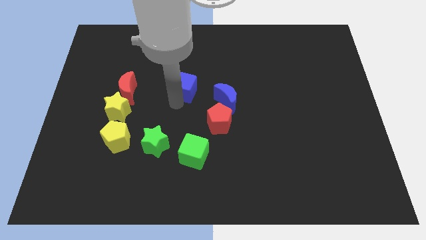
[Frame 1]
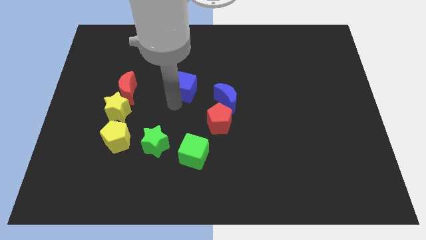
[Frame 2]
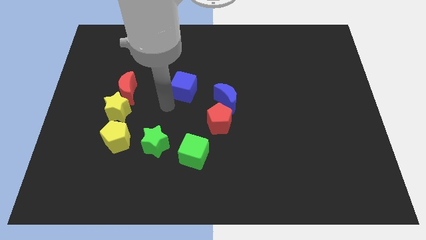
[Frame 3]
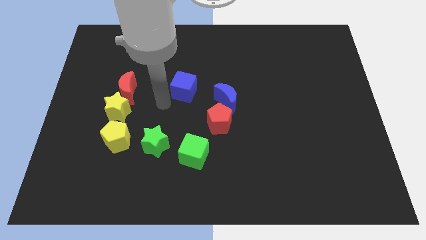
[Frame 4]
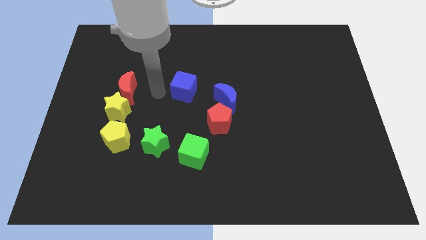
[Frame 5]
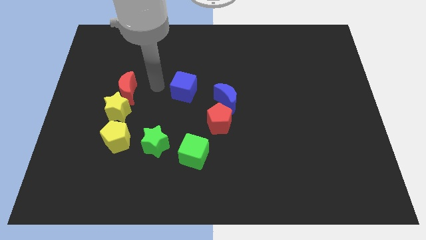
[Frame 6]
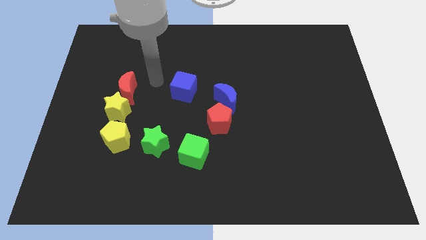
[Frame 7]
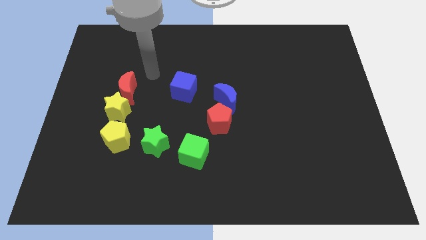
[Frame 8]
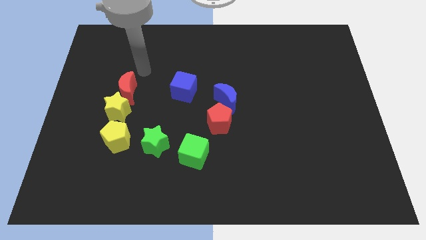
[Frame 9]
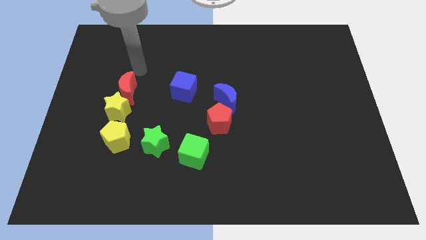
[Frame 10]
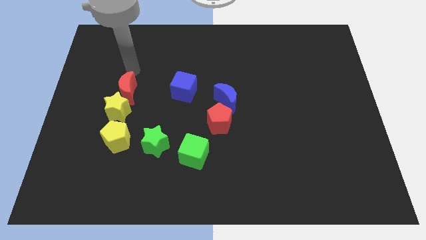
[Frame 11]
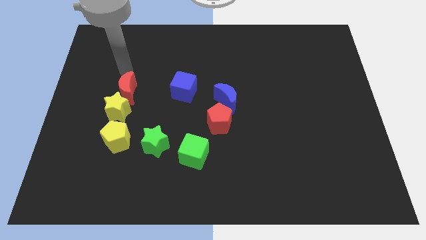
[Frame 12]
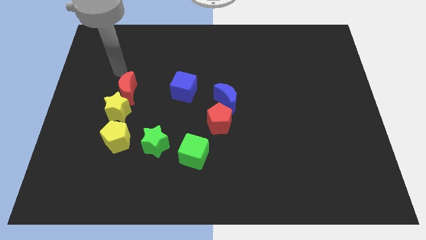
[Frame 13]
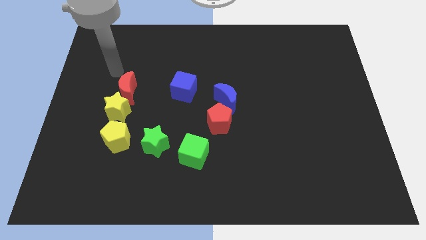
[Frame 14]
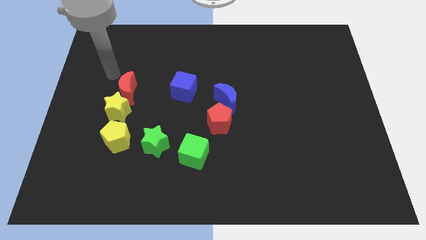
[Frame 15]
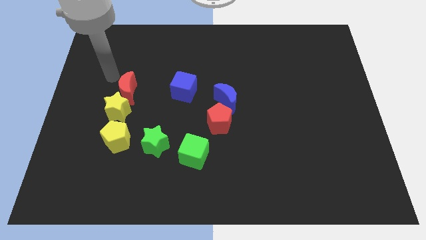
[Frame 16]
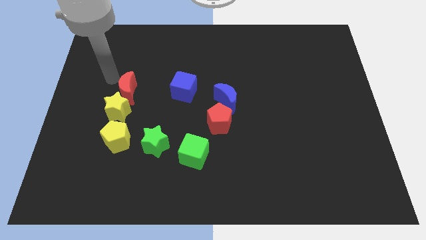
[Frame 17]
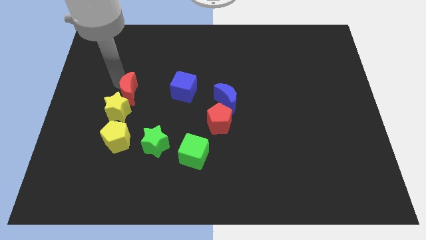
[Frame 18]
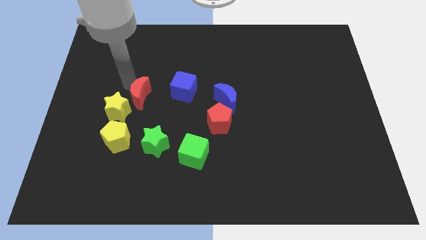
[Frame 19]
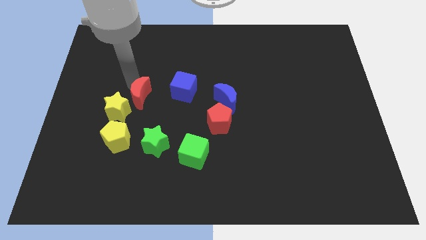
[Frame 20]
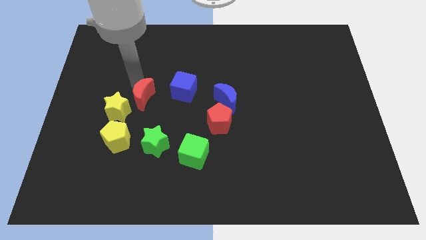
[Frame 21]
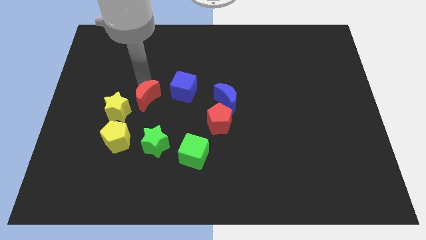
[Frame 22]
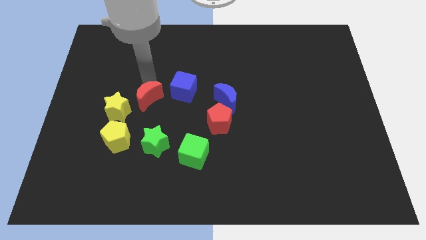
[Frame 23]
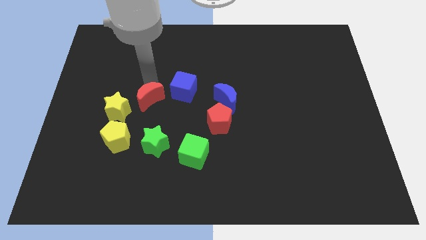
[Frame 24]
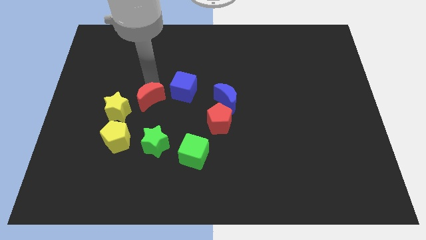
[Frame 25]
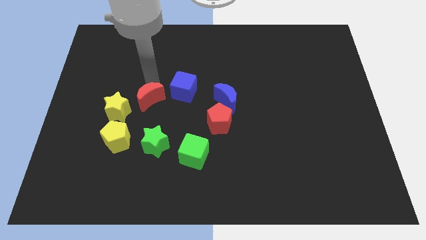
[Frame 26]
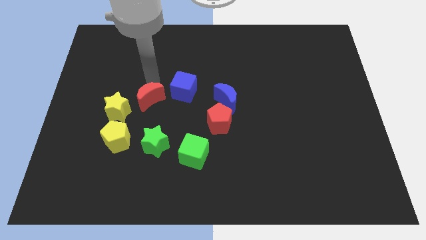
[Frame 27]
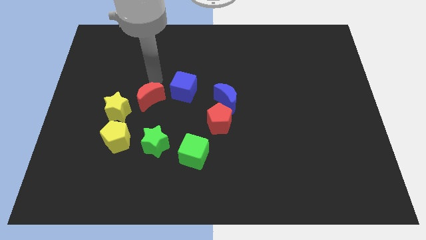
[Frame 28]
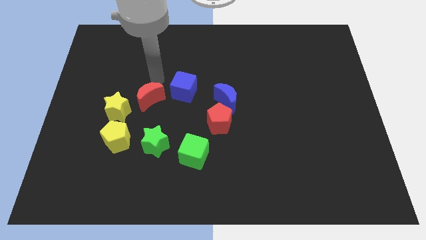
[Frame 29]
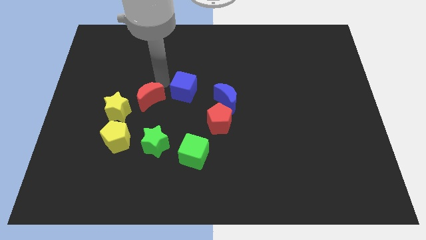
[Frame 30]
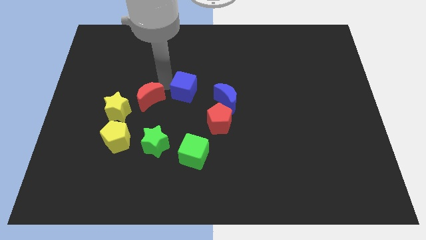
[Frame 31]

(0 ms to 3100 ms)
push the red moon towards the center of the board

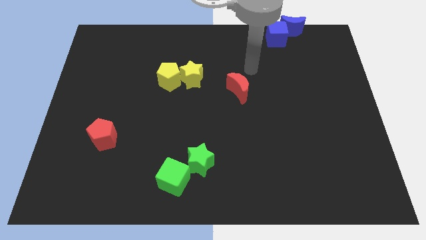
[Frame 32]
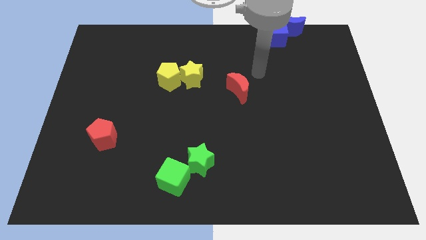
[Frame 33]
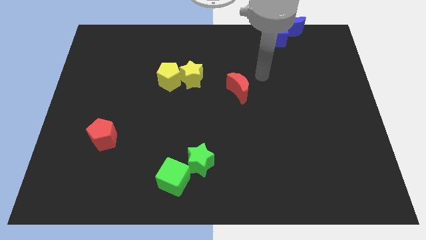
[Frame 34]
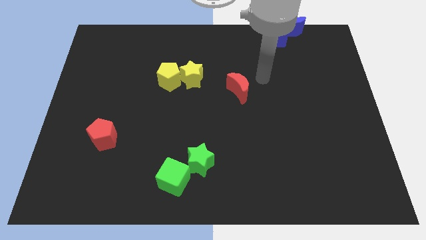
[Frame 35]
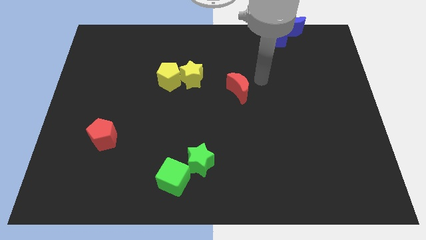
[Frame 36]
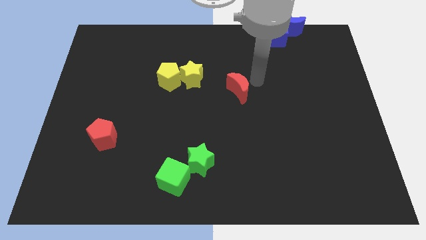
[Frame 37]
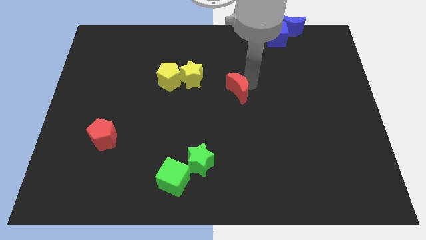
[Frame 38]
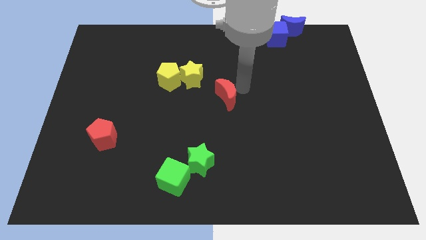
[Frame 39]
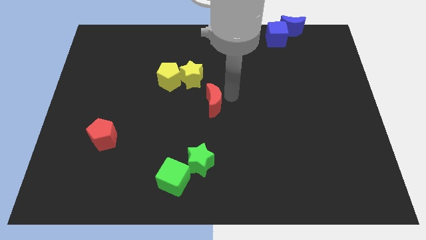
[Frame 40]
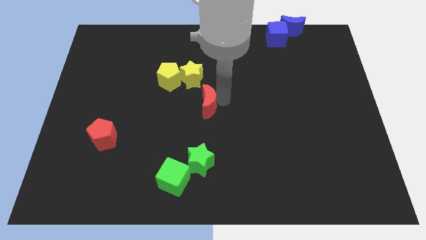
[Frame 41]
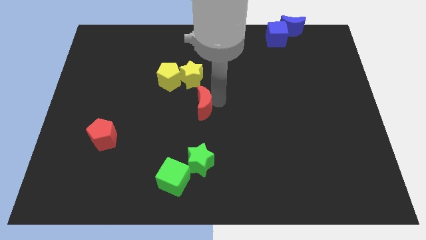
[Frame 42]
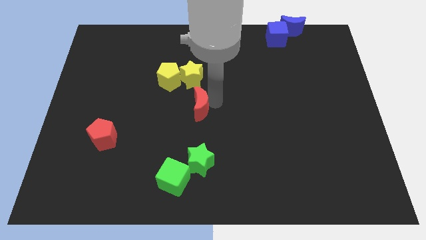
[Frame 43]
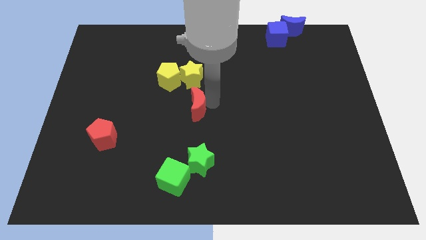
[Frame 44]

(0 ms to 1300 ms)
push the red crescent to the bottom of the yellow star

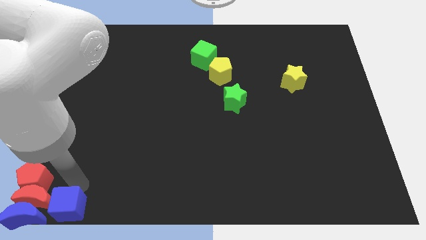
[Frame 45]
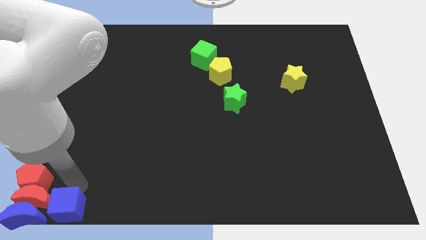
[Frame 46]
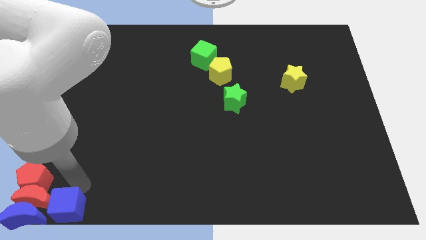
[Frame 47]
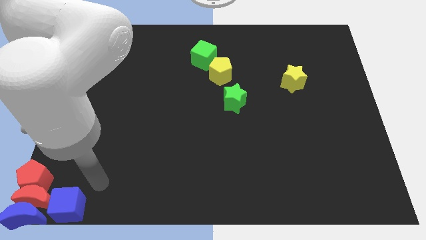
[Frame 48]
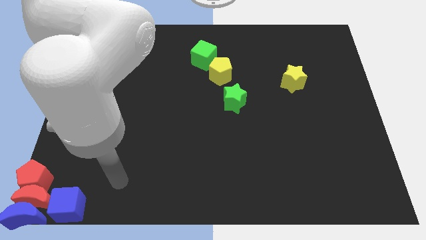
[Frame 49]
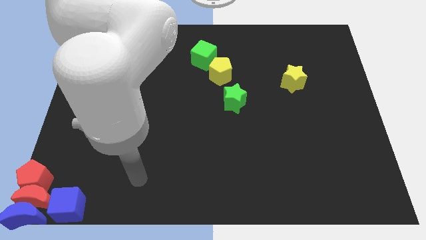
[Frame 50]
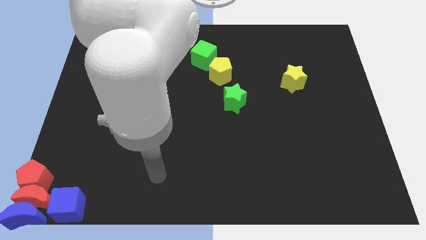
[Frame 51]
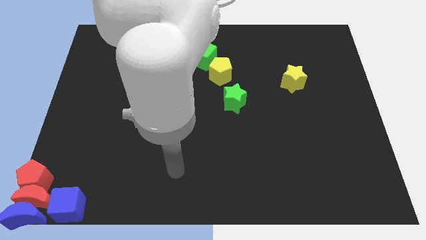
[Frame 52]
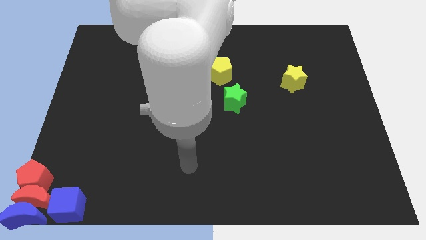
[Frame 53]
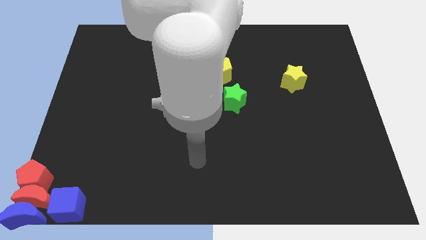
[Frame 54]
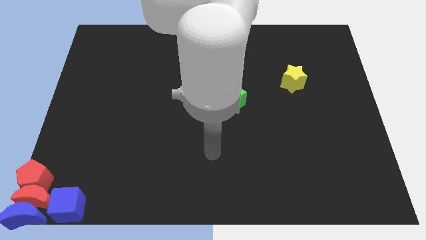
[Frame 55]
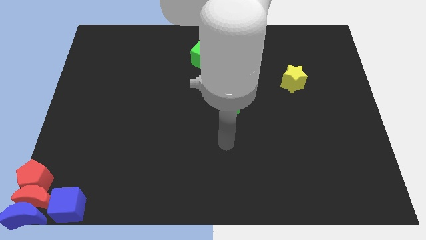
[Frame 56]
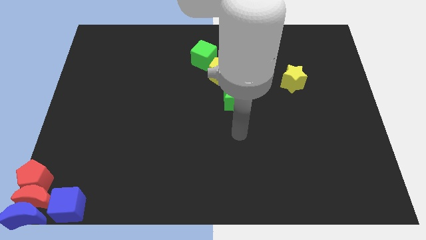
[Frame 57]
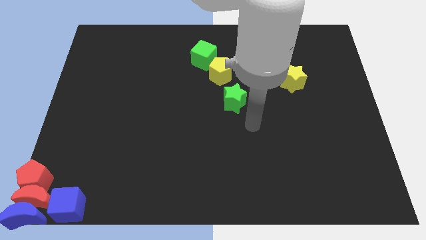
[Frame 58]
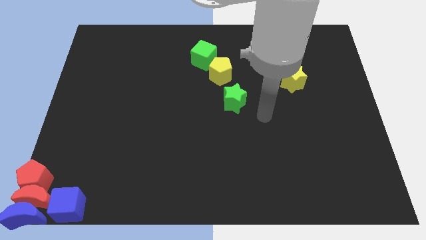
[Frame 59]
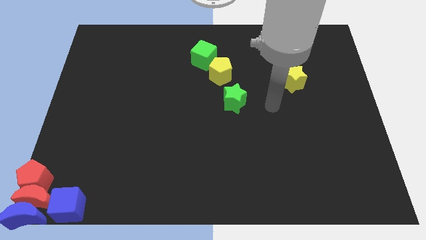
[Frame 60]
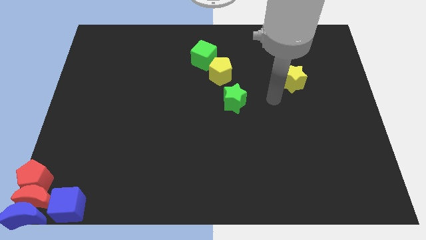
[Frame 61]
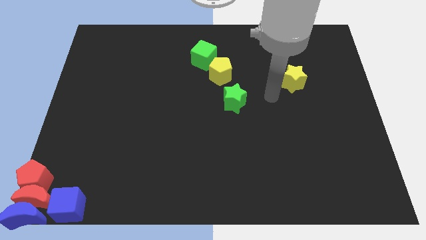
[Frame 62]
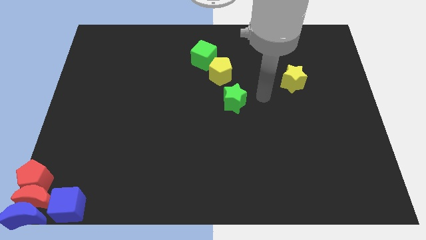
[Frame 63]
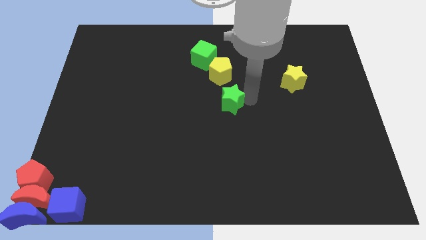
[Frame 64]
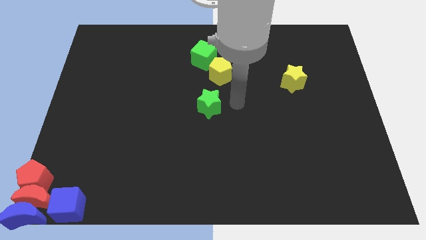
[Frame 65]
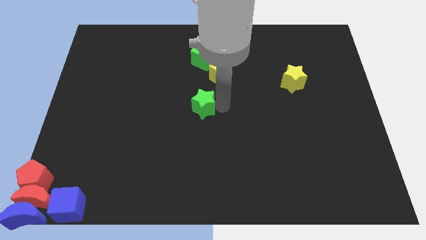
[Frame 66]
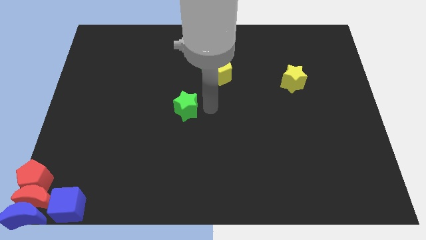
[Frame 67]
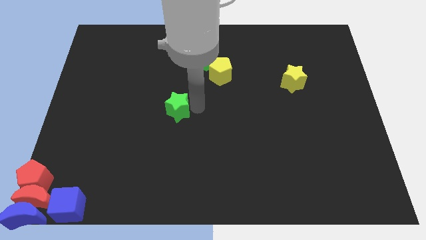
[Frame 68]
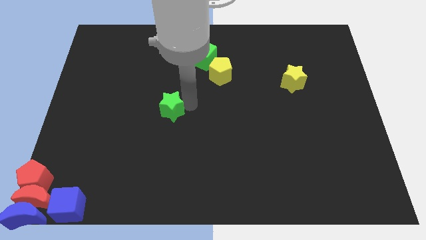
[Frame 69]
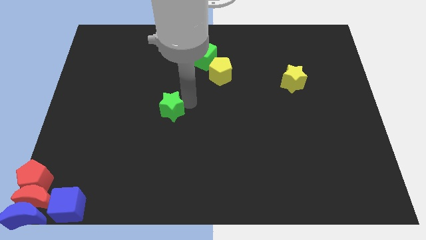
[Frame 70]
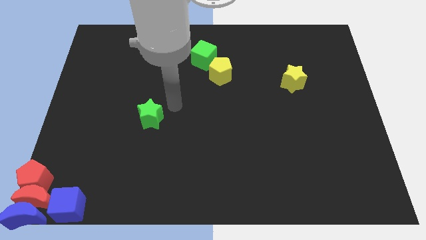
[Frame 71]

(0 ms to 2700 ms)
place the green star diagonally bottom left to the yellow pentagon

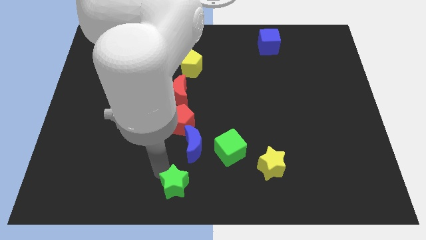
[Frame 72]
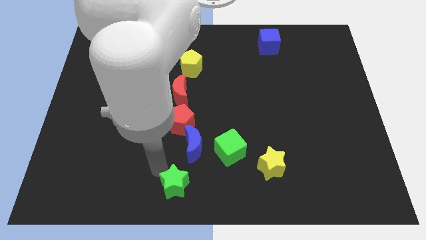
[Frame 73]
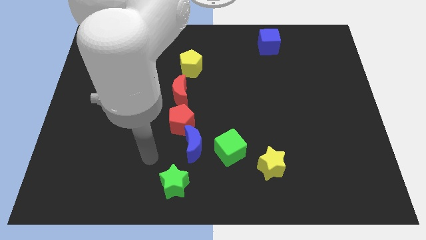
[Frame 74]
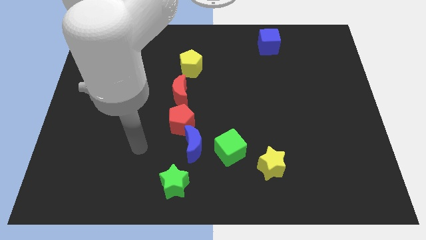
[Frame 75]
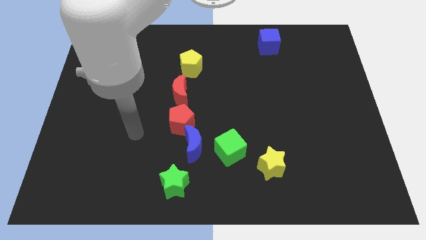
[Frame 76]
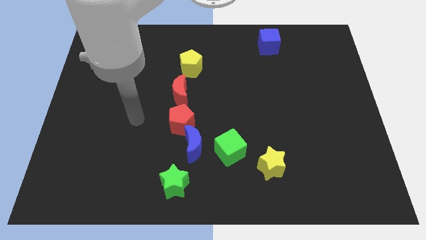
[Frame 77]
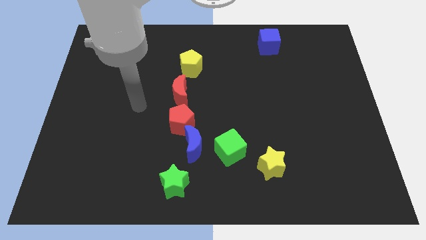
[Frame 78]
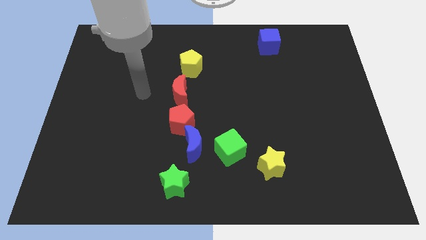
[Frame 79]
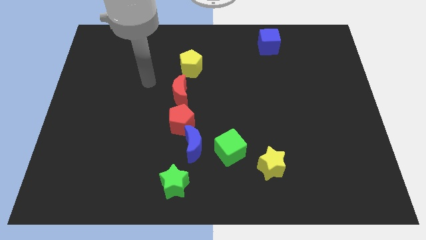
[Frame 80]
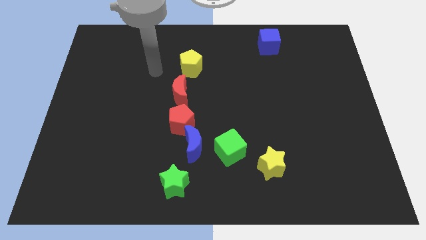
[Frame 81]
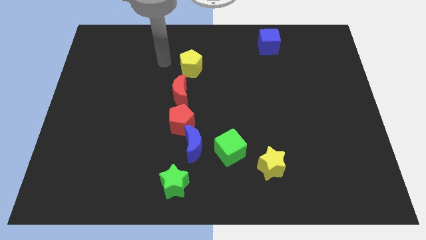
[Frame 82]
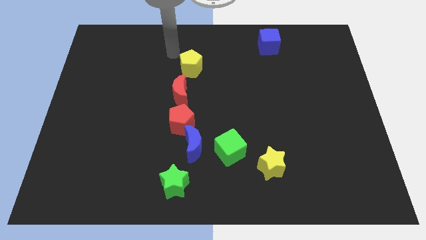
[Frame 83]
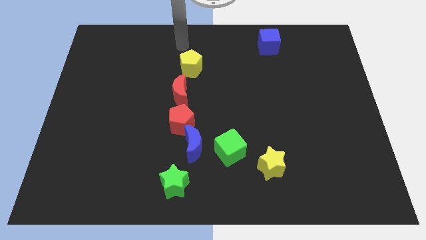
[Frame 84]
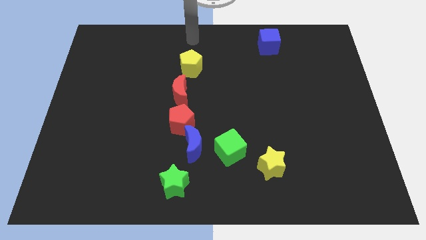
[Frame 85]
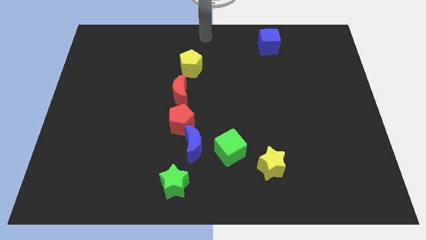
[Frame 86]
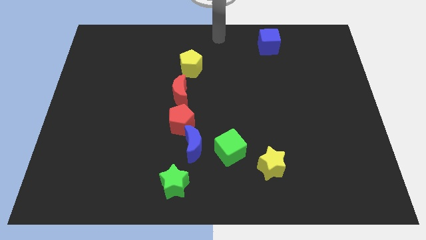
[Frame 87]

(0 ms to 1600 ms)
move your arm away from the green star

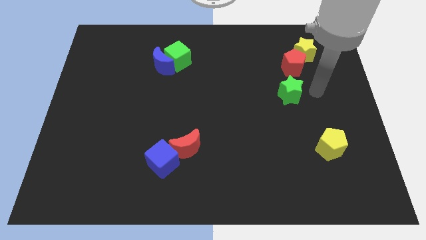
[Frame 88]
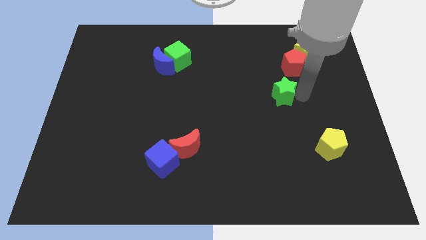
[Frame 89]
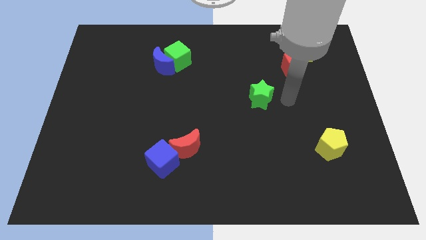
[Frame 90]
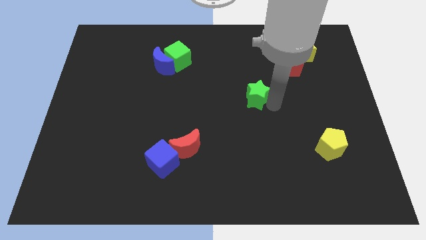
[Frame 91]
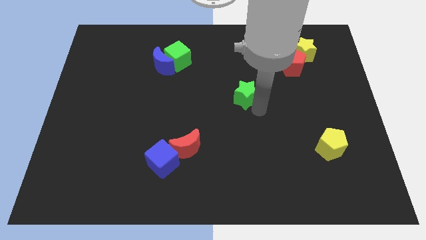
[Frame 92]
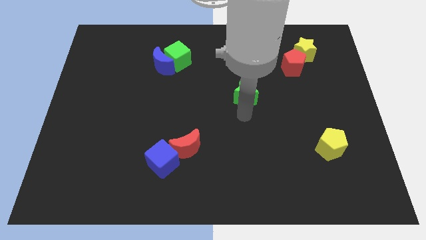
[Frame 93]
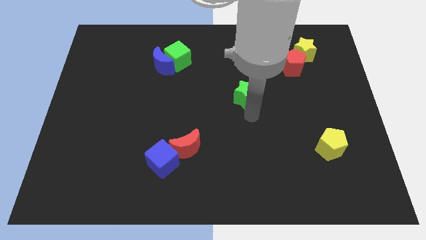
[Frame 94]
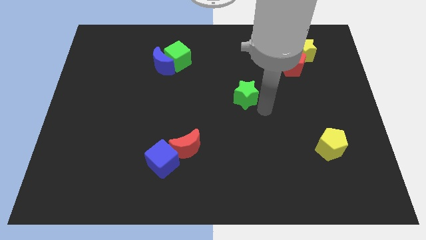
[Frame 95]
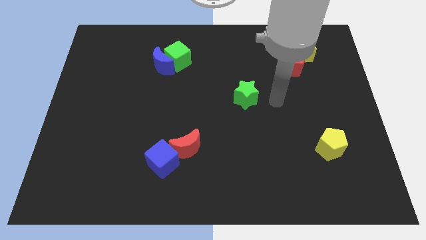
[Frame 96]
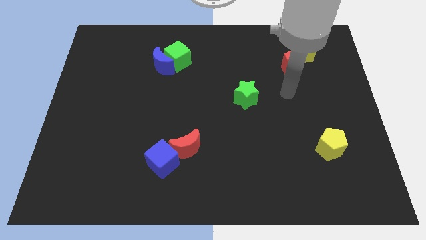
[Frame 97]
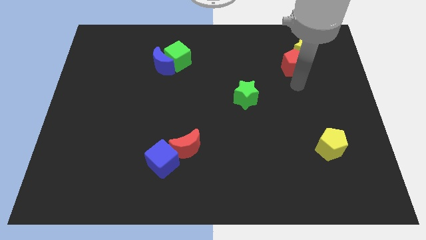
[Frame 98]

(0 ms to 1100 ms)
push green star towards the center of the board
